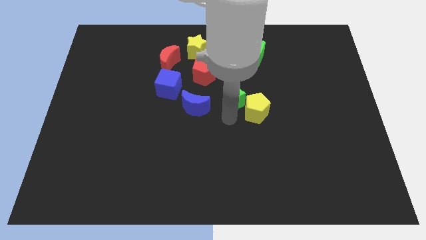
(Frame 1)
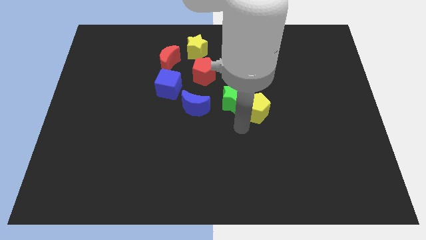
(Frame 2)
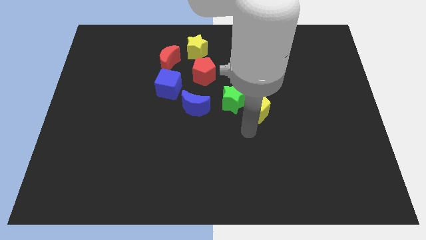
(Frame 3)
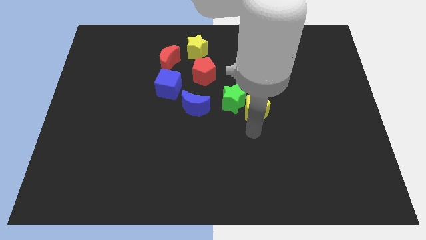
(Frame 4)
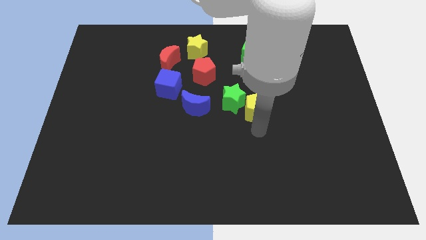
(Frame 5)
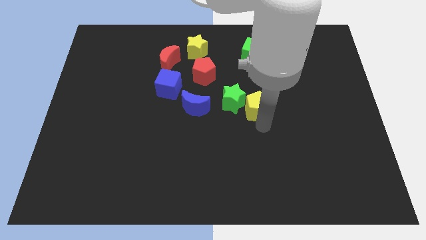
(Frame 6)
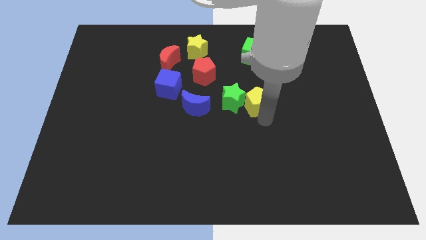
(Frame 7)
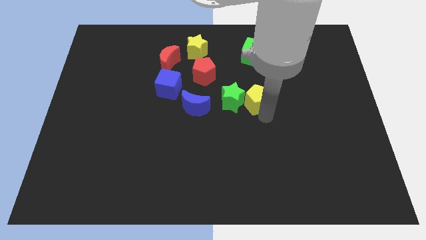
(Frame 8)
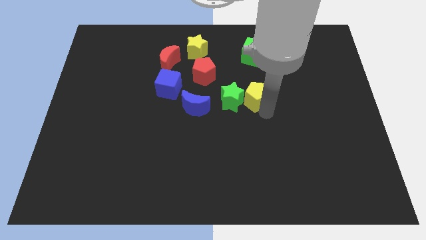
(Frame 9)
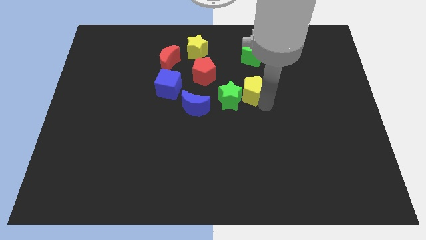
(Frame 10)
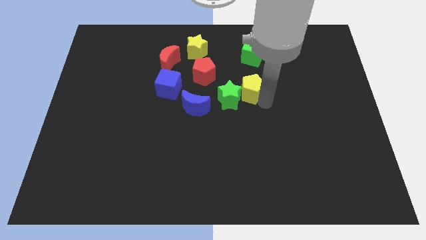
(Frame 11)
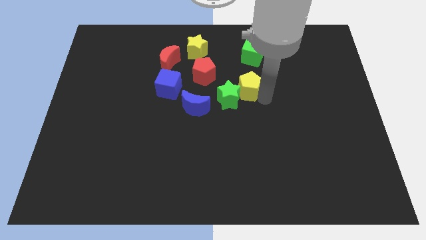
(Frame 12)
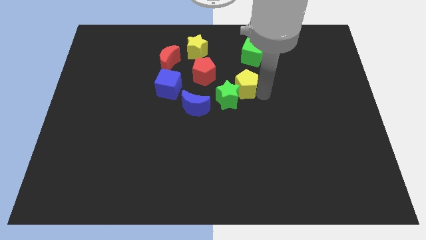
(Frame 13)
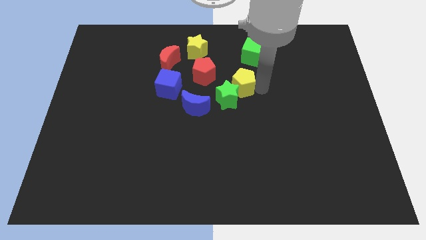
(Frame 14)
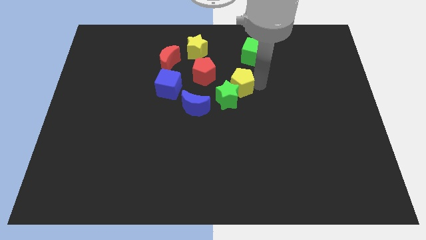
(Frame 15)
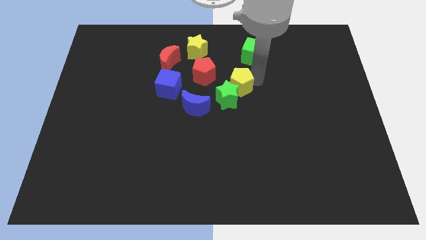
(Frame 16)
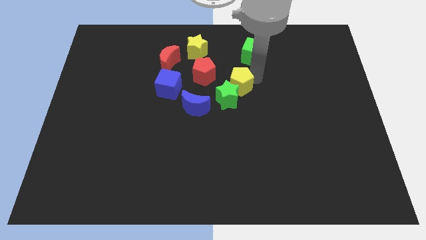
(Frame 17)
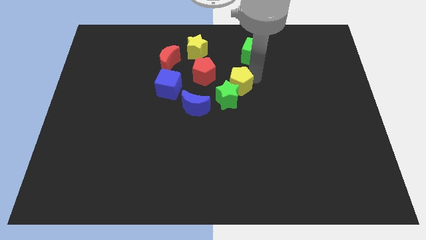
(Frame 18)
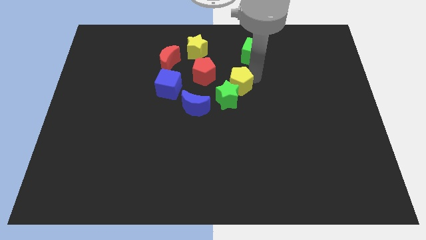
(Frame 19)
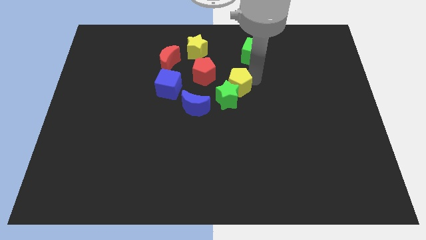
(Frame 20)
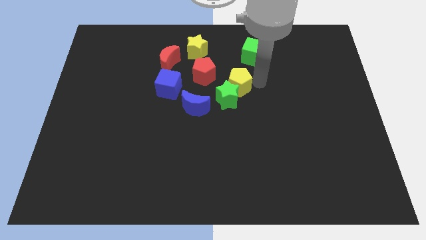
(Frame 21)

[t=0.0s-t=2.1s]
push the yellow pentagon above the green star diagonally

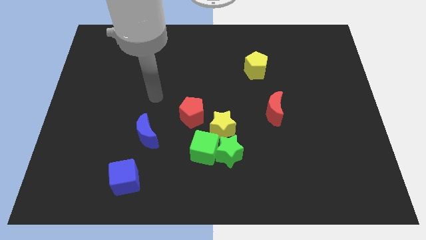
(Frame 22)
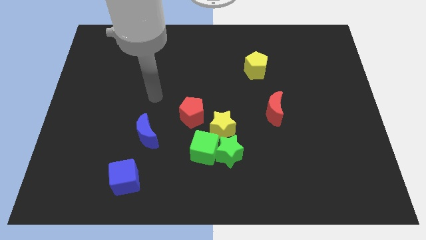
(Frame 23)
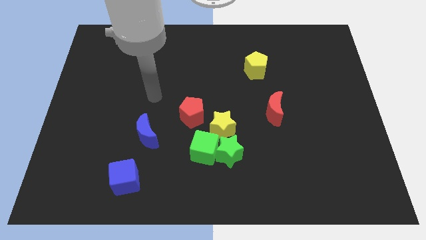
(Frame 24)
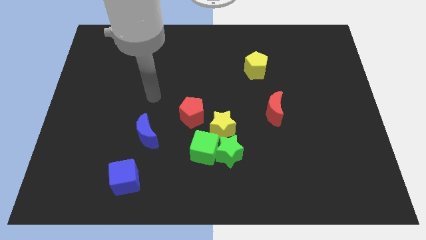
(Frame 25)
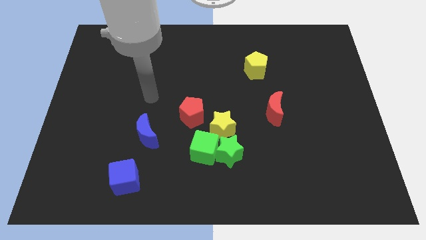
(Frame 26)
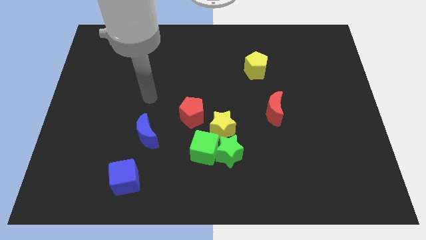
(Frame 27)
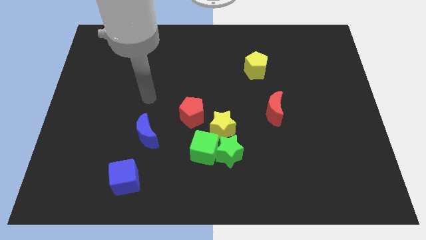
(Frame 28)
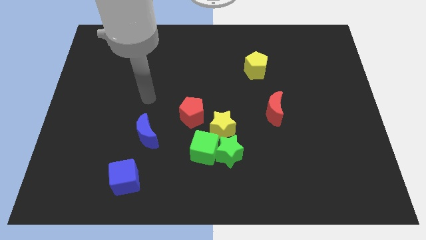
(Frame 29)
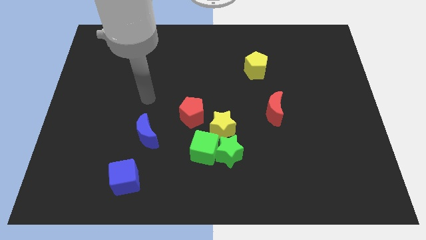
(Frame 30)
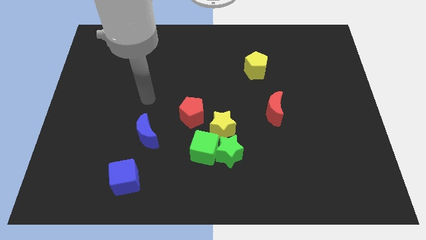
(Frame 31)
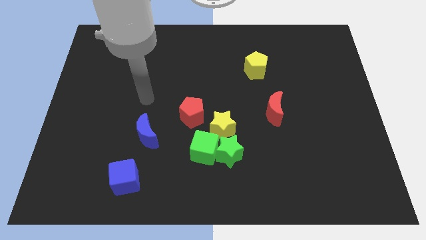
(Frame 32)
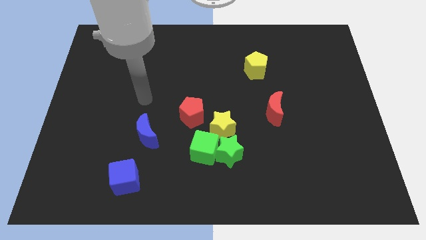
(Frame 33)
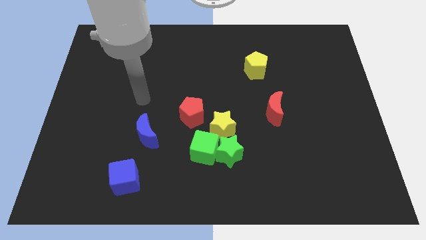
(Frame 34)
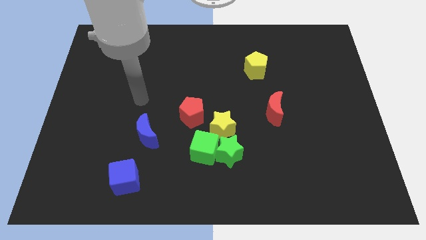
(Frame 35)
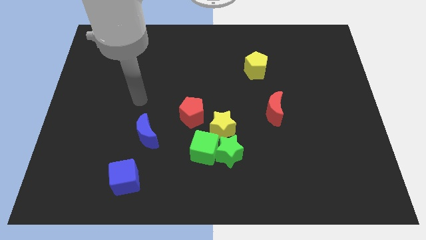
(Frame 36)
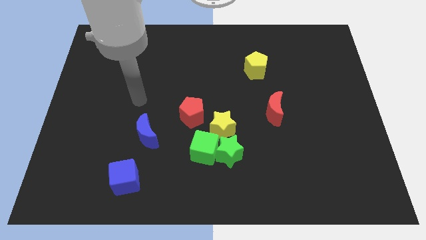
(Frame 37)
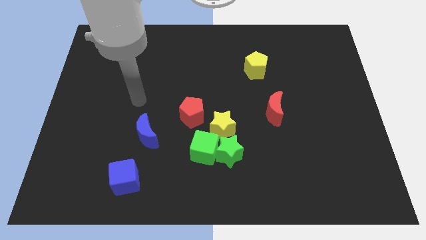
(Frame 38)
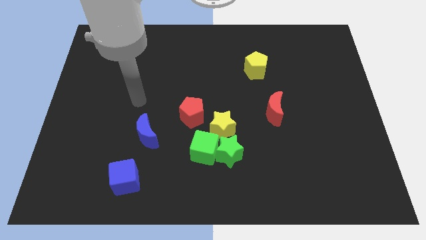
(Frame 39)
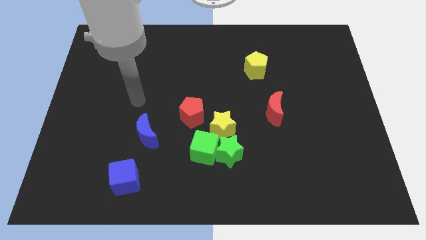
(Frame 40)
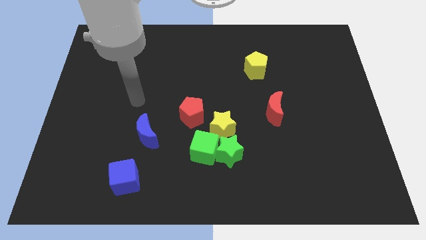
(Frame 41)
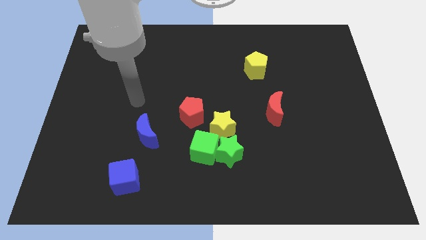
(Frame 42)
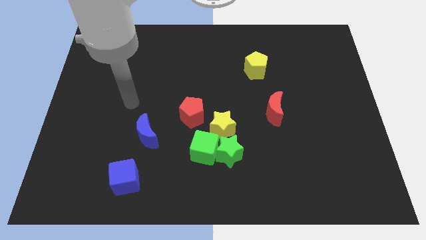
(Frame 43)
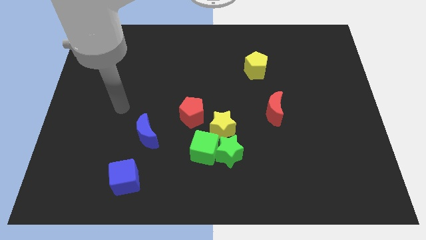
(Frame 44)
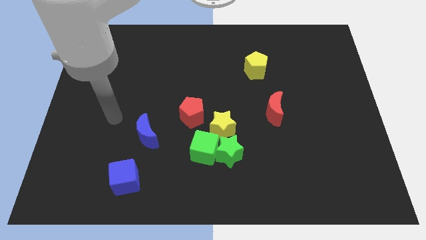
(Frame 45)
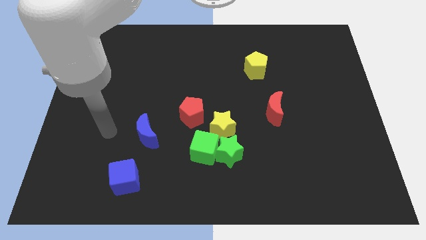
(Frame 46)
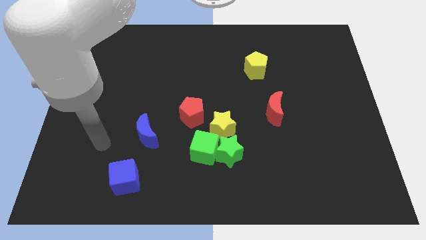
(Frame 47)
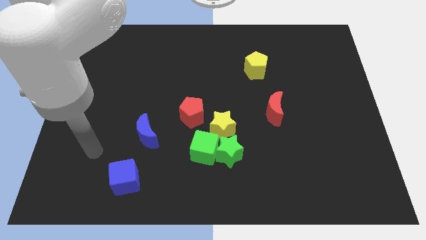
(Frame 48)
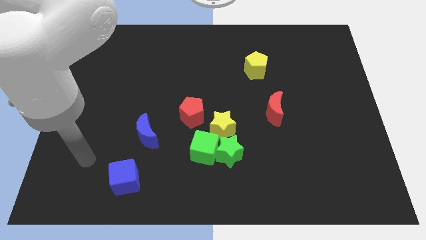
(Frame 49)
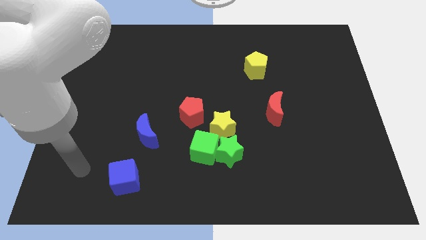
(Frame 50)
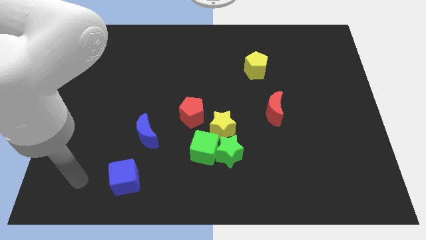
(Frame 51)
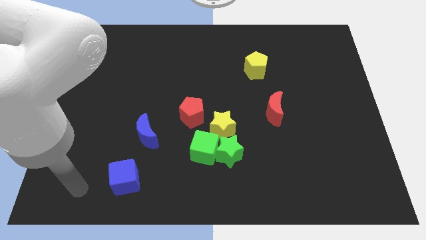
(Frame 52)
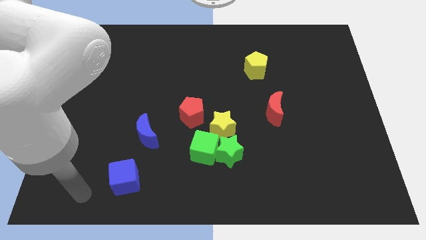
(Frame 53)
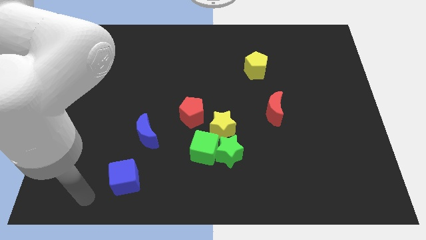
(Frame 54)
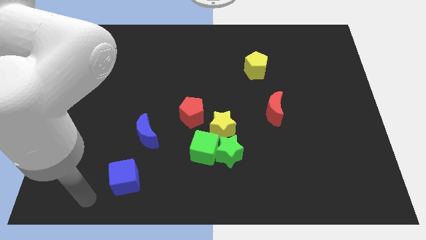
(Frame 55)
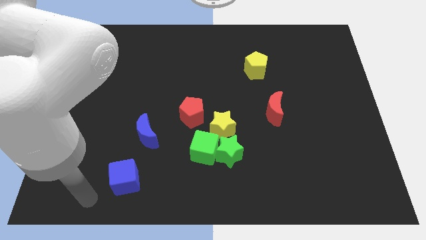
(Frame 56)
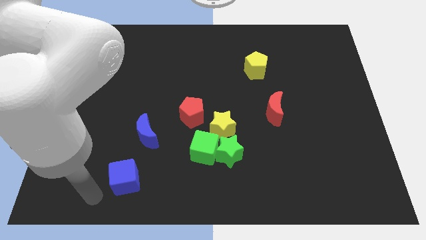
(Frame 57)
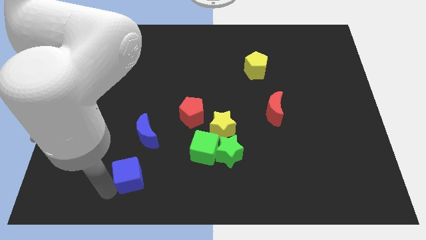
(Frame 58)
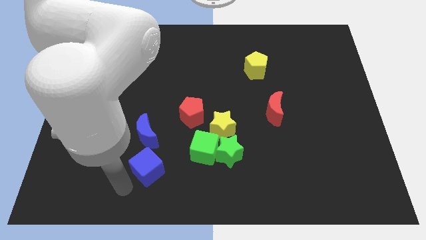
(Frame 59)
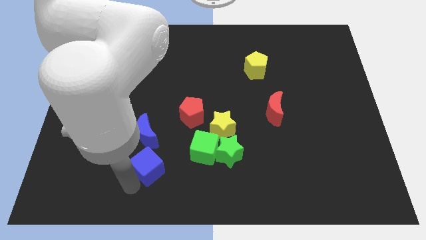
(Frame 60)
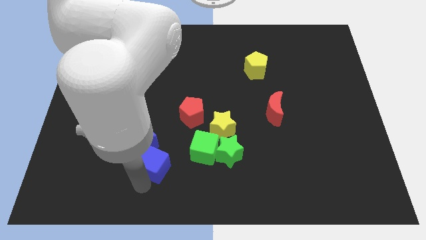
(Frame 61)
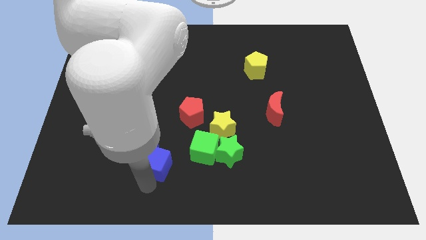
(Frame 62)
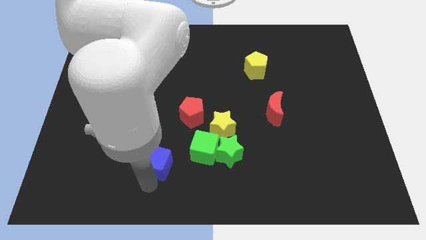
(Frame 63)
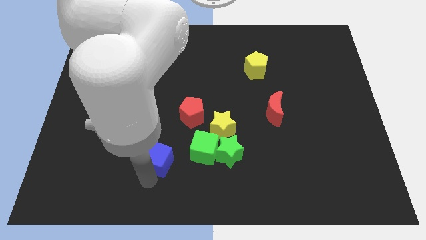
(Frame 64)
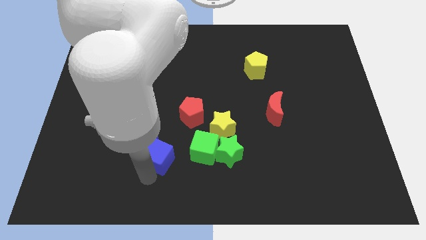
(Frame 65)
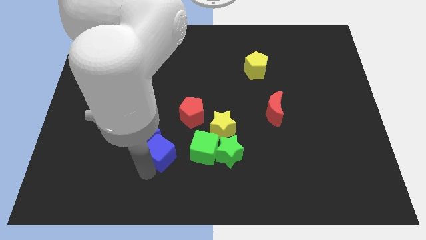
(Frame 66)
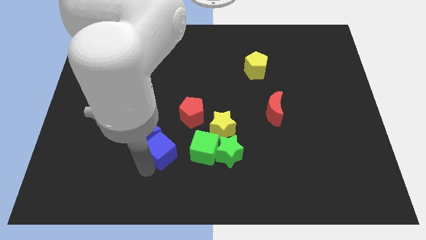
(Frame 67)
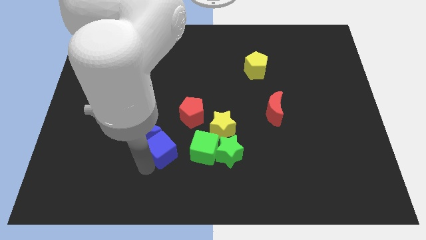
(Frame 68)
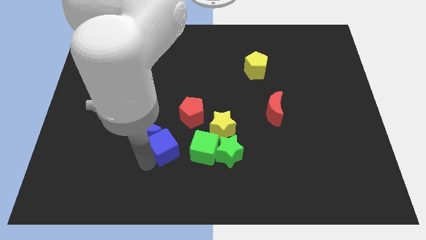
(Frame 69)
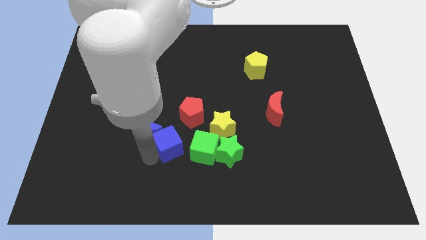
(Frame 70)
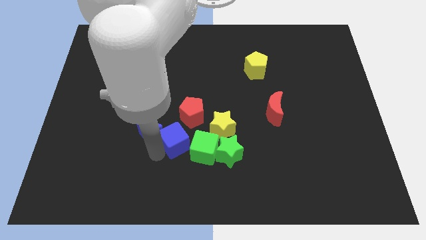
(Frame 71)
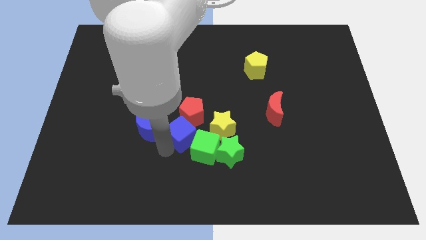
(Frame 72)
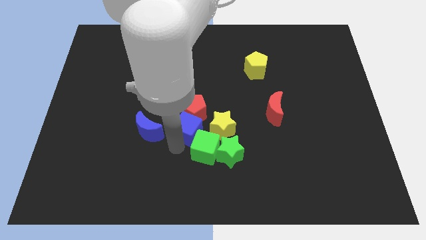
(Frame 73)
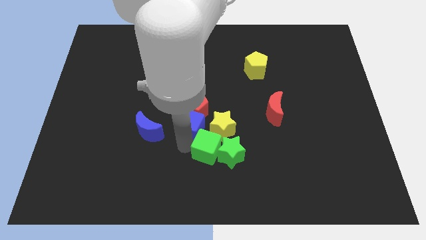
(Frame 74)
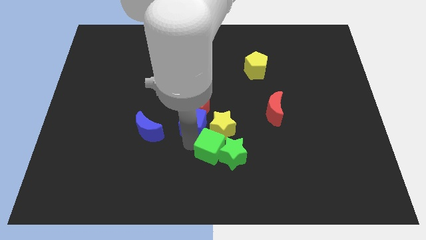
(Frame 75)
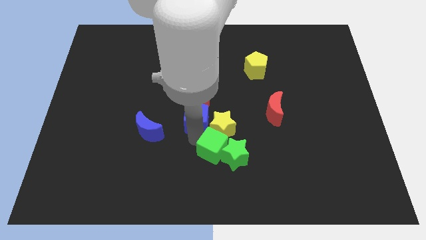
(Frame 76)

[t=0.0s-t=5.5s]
push the blue cube into the red pentagon

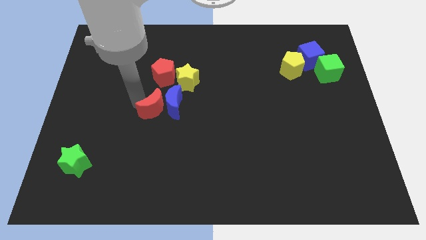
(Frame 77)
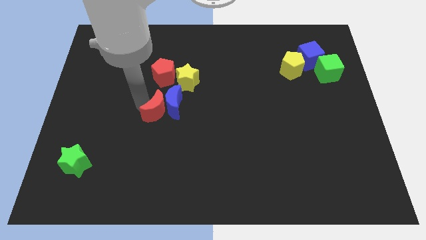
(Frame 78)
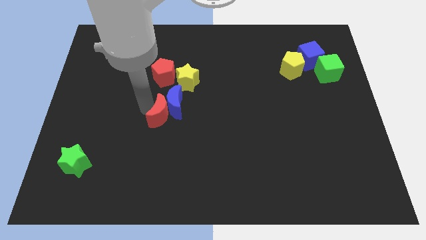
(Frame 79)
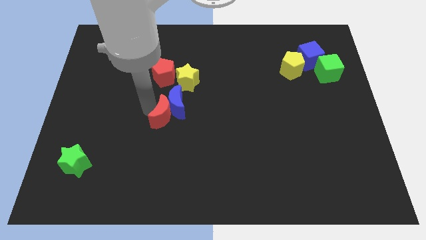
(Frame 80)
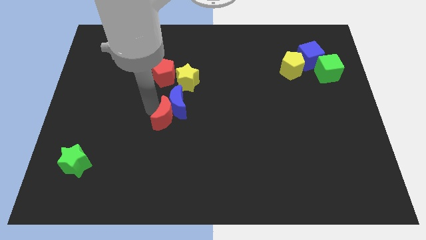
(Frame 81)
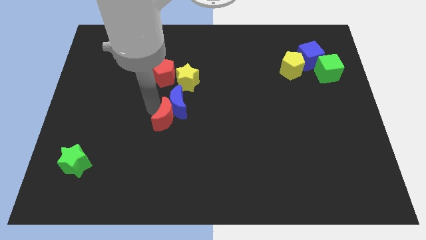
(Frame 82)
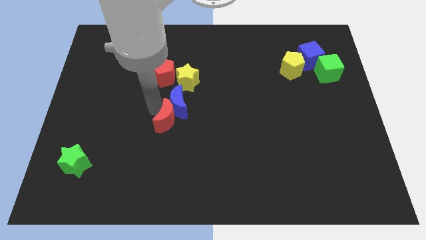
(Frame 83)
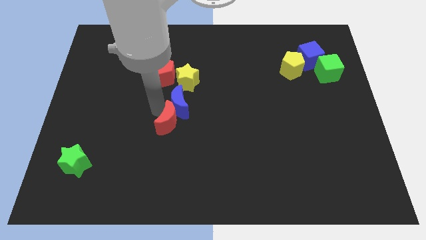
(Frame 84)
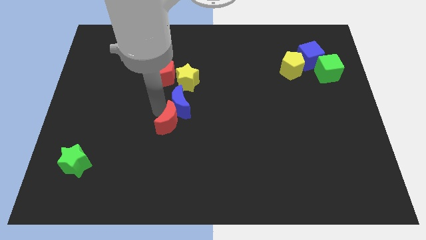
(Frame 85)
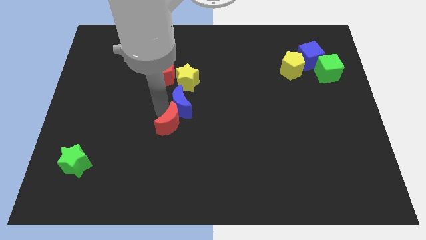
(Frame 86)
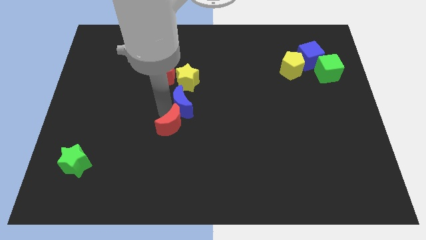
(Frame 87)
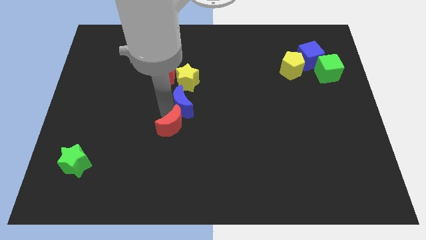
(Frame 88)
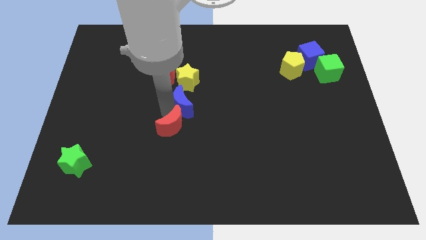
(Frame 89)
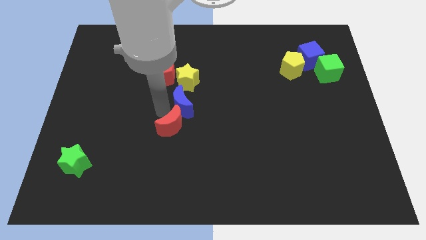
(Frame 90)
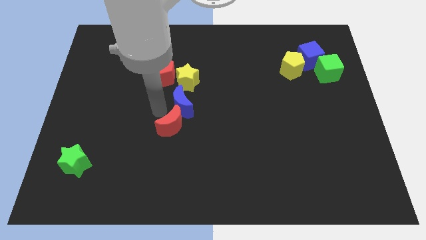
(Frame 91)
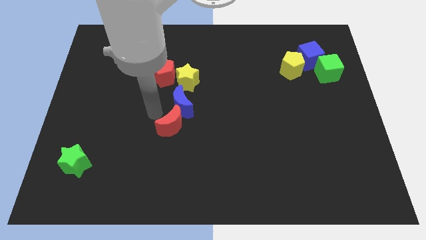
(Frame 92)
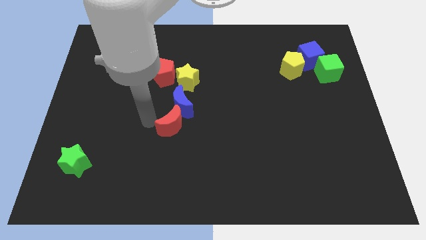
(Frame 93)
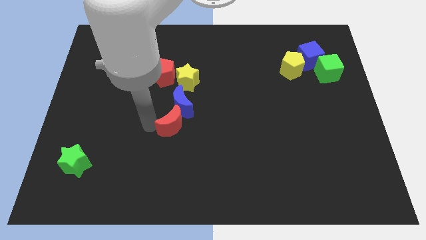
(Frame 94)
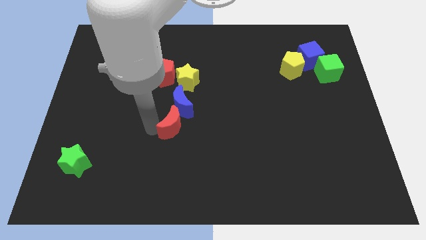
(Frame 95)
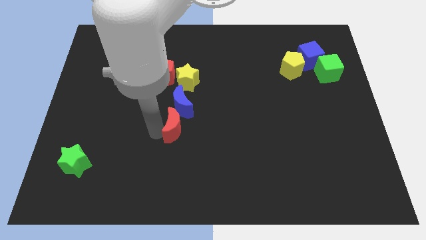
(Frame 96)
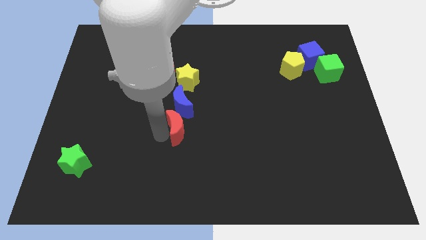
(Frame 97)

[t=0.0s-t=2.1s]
place the red moon at the bottom of blue moon
